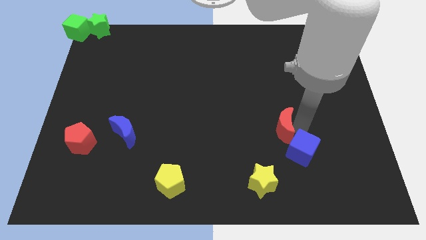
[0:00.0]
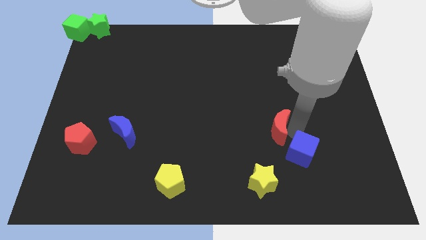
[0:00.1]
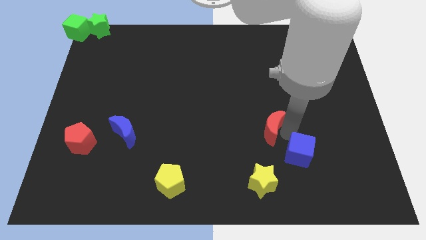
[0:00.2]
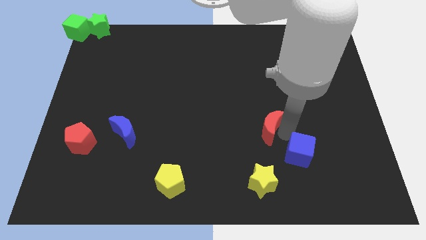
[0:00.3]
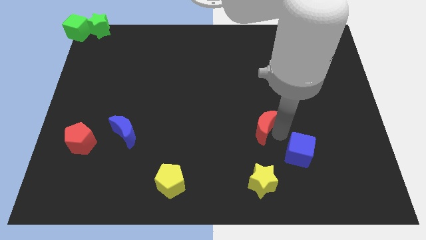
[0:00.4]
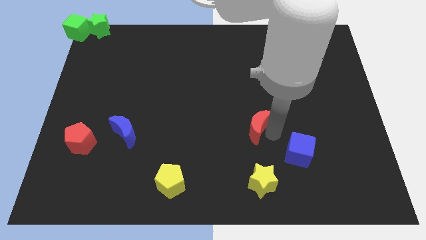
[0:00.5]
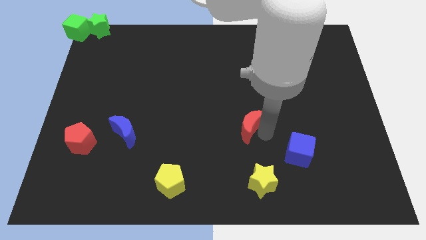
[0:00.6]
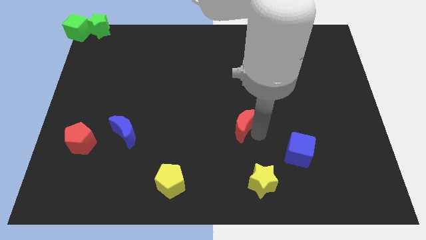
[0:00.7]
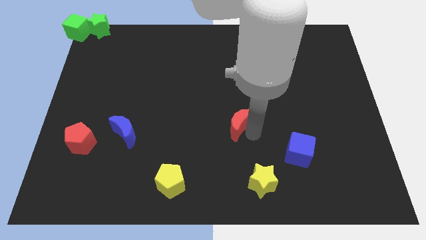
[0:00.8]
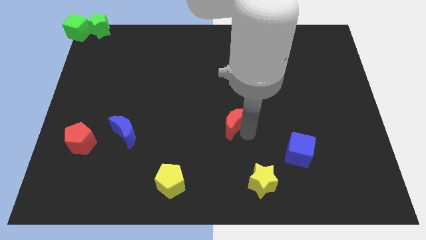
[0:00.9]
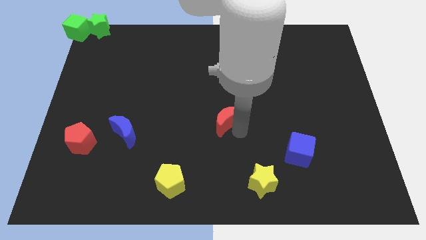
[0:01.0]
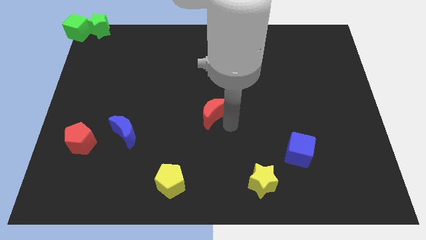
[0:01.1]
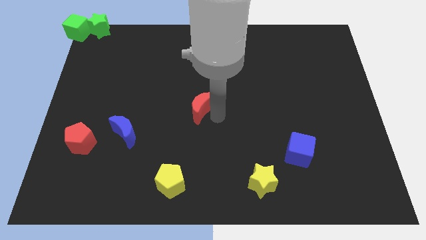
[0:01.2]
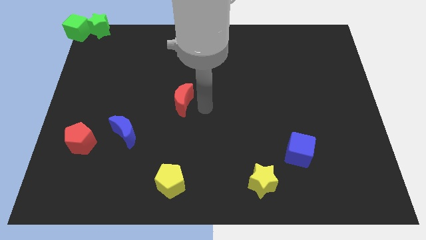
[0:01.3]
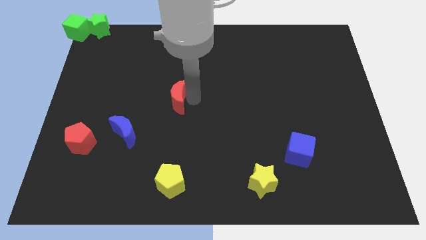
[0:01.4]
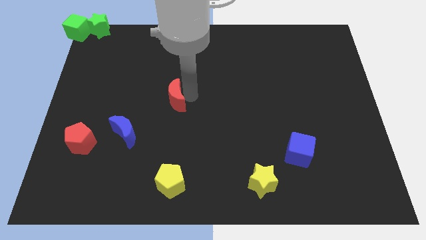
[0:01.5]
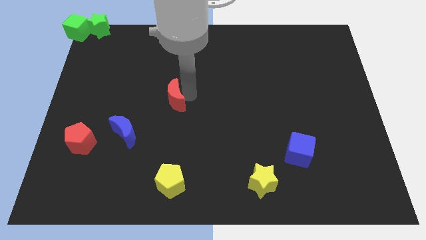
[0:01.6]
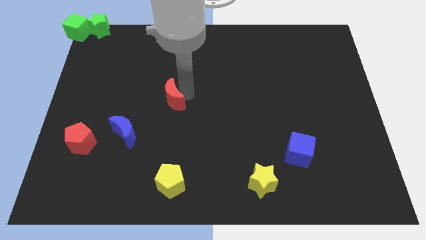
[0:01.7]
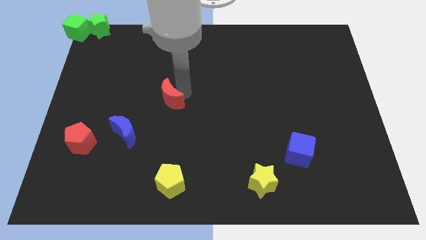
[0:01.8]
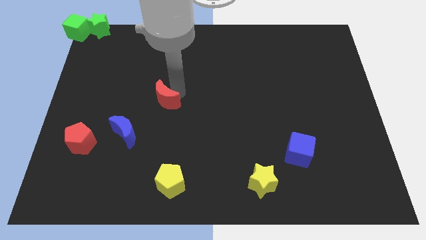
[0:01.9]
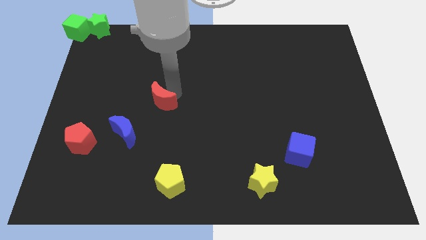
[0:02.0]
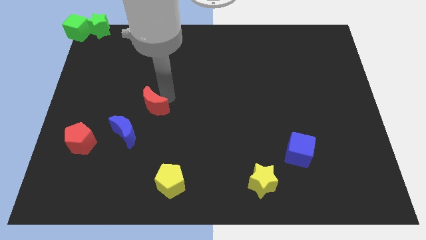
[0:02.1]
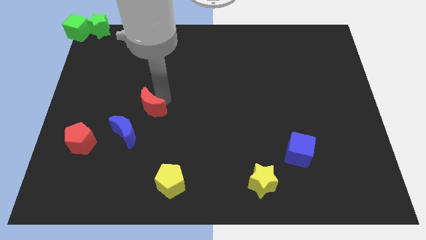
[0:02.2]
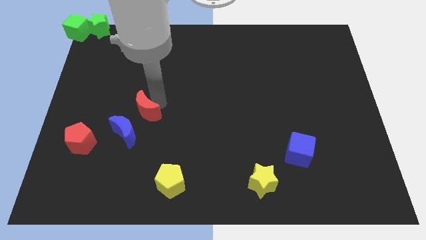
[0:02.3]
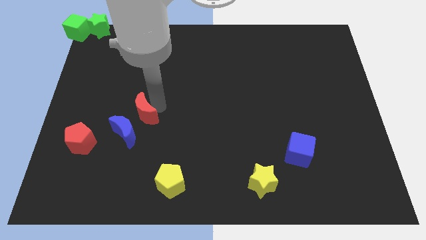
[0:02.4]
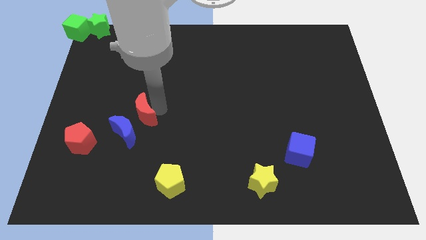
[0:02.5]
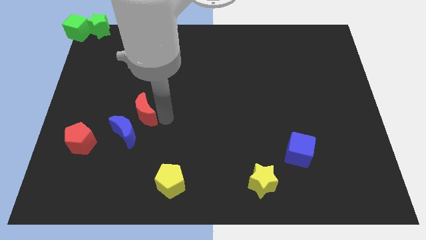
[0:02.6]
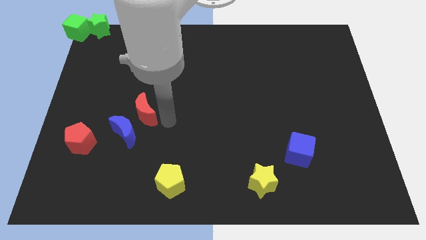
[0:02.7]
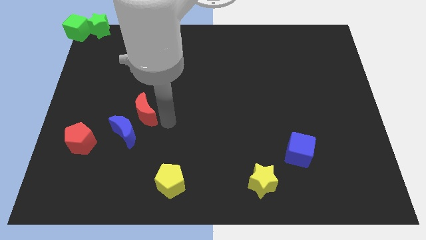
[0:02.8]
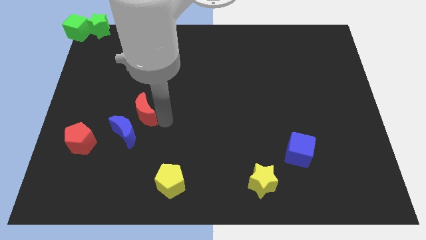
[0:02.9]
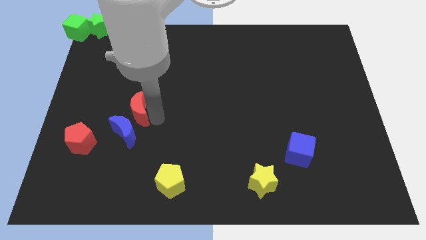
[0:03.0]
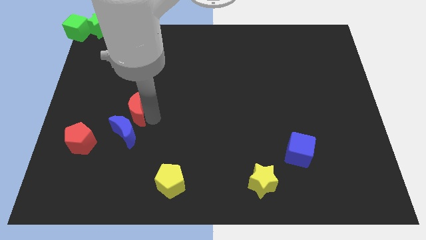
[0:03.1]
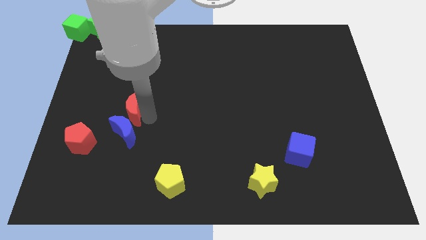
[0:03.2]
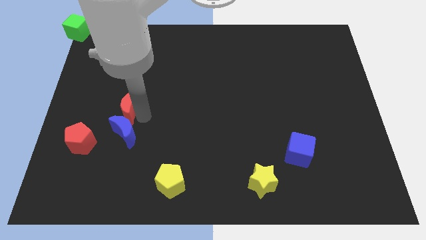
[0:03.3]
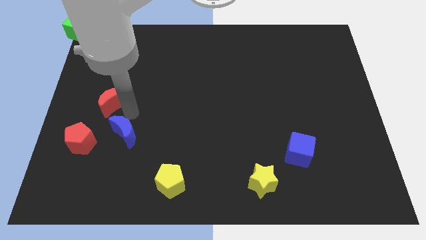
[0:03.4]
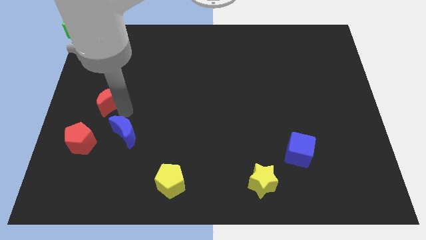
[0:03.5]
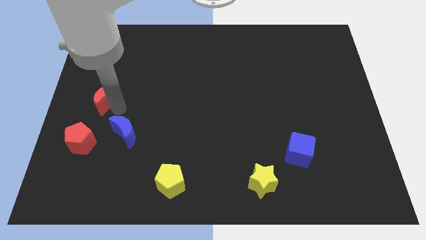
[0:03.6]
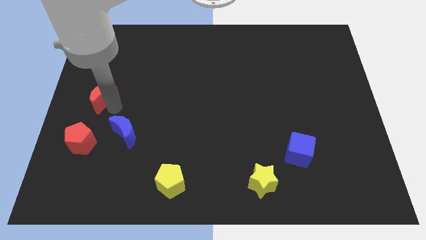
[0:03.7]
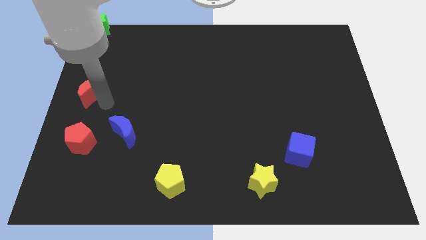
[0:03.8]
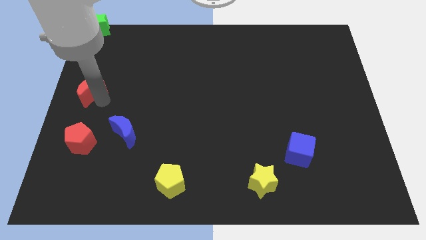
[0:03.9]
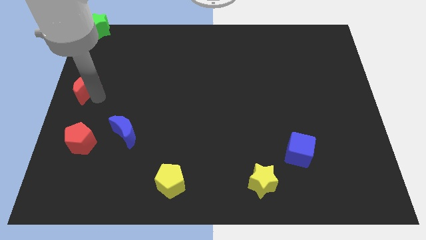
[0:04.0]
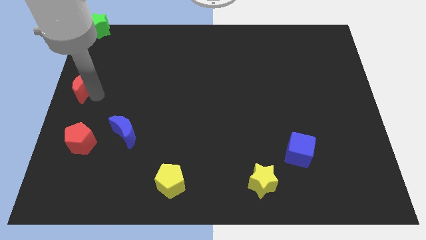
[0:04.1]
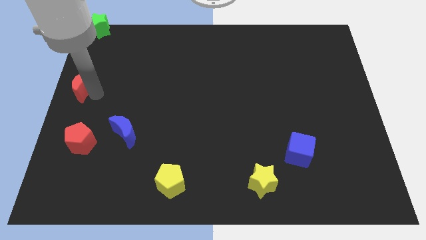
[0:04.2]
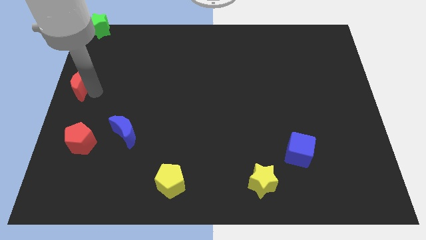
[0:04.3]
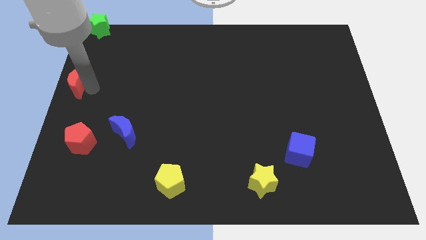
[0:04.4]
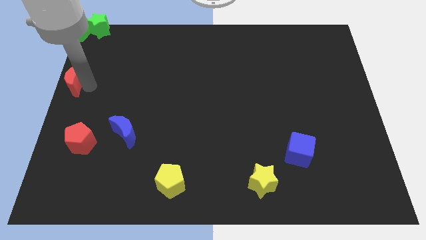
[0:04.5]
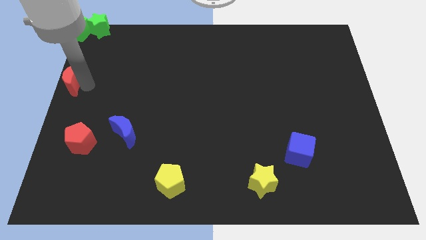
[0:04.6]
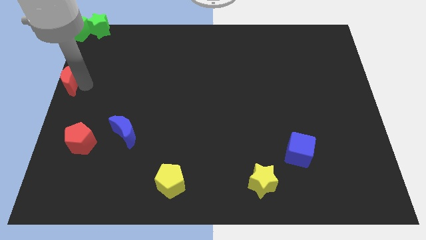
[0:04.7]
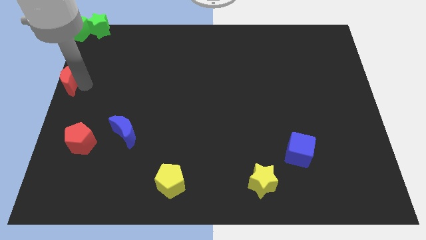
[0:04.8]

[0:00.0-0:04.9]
slide the red crescent to the left center of the board

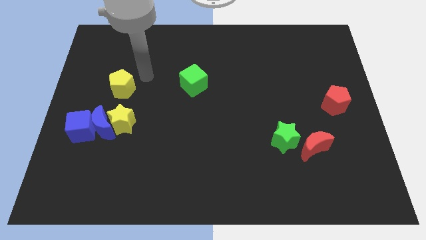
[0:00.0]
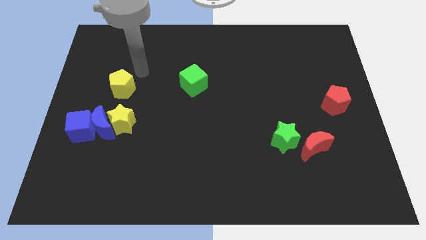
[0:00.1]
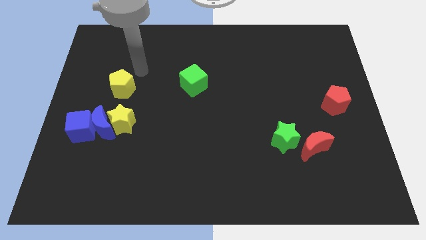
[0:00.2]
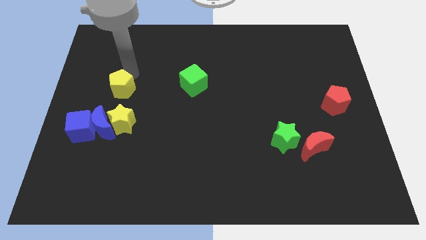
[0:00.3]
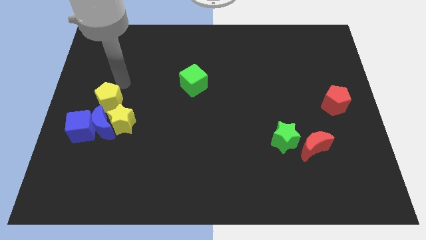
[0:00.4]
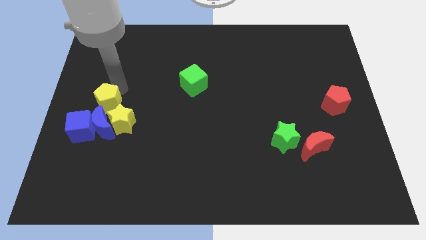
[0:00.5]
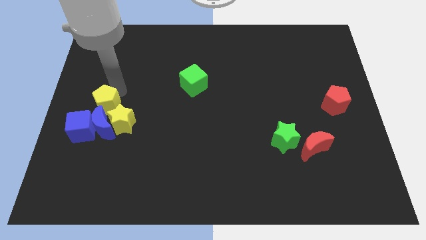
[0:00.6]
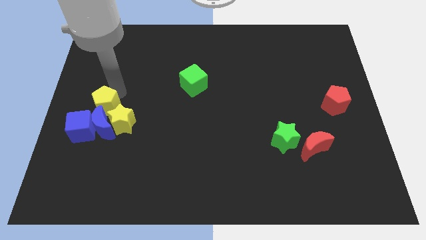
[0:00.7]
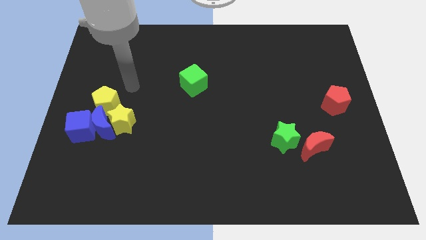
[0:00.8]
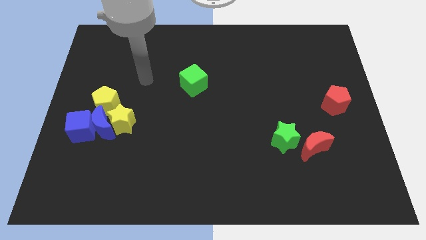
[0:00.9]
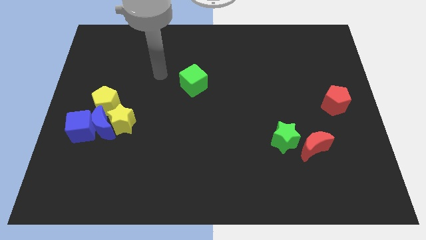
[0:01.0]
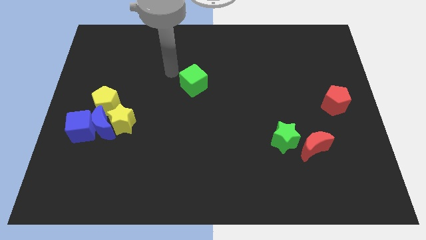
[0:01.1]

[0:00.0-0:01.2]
push the yellow pentagon into the blue crescent

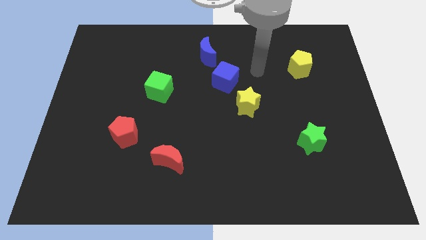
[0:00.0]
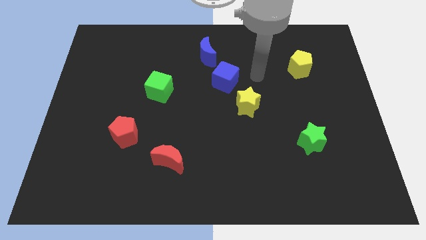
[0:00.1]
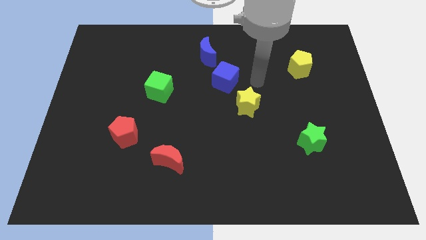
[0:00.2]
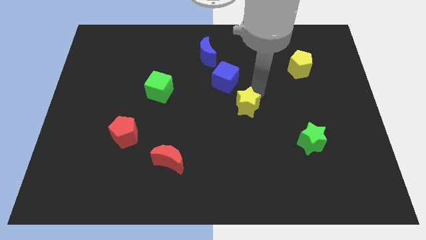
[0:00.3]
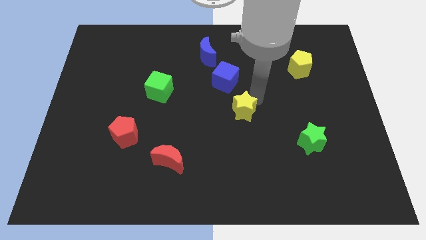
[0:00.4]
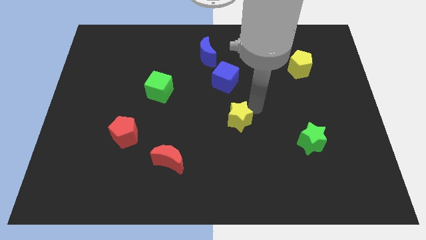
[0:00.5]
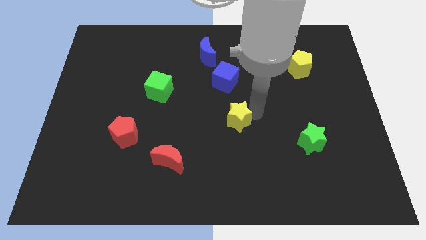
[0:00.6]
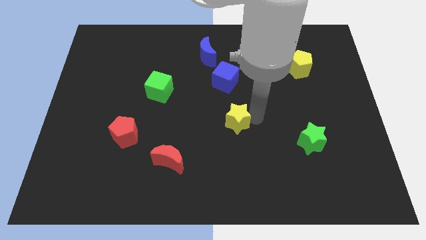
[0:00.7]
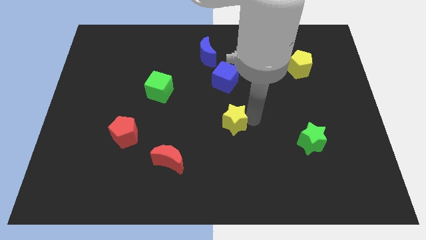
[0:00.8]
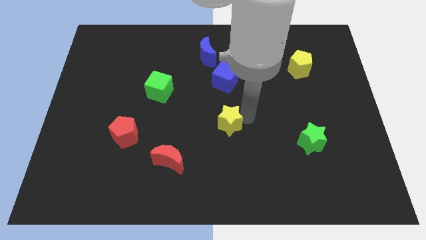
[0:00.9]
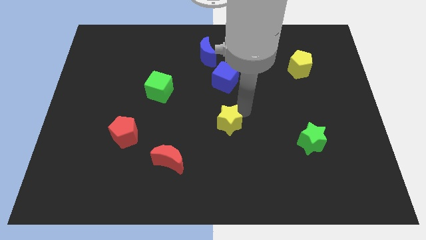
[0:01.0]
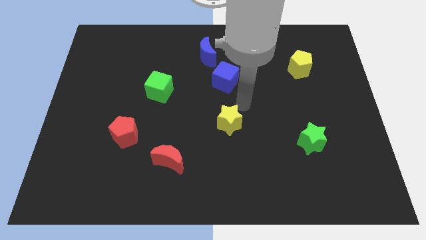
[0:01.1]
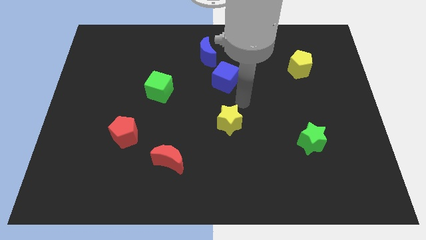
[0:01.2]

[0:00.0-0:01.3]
move the yellow star below the blue cube

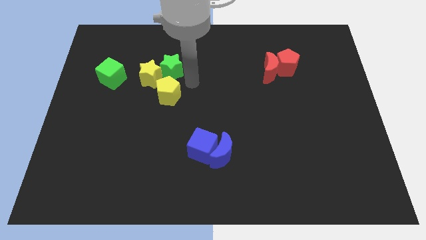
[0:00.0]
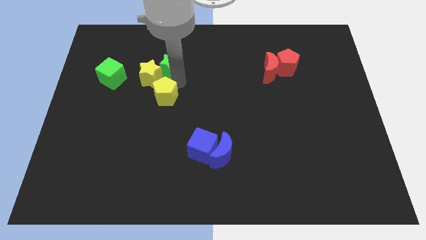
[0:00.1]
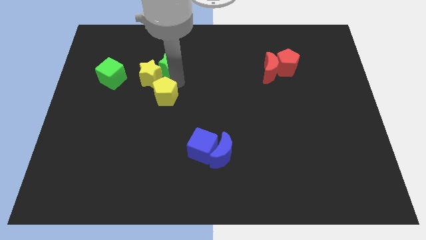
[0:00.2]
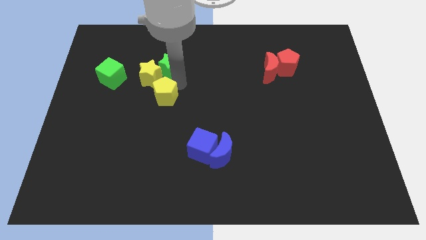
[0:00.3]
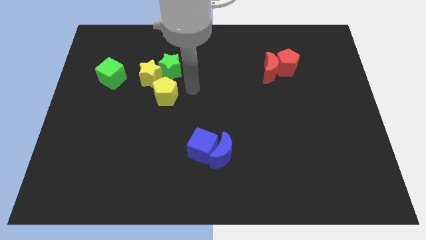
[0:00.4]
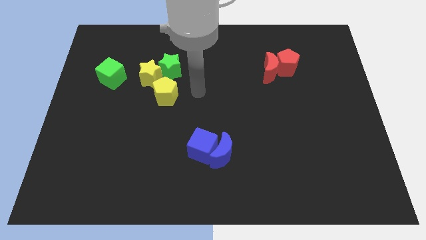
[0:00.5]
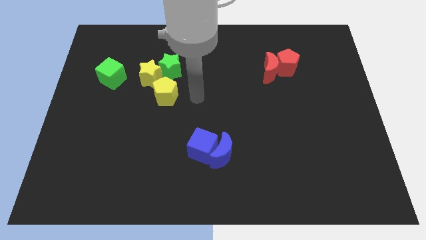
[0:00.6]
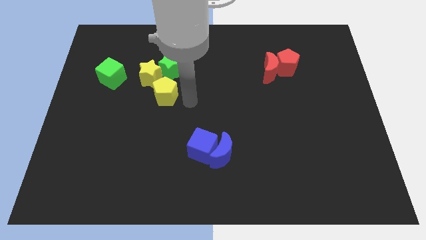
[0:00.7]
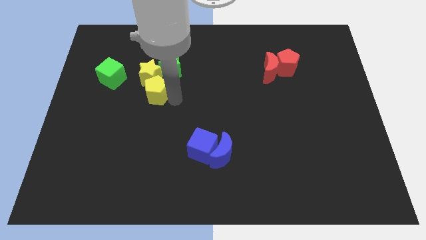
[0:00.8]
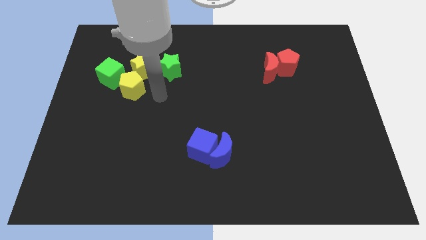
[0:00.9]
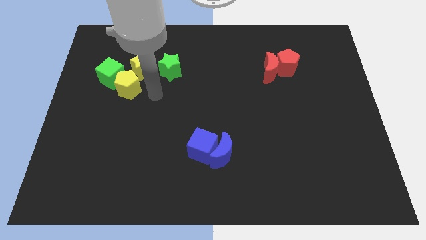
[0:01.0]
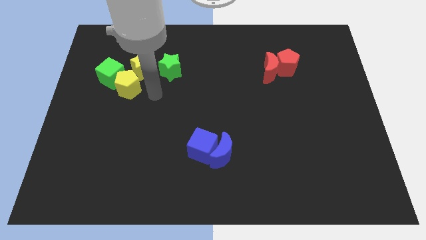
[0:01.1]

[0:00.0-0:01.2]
push the yellow pentagon towards the green cube

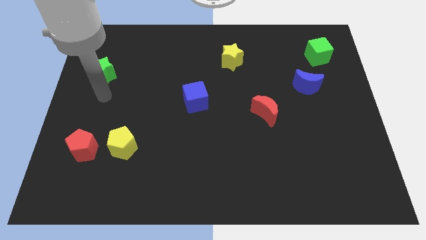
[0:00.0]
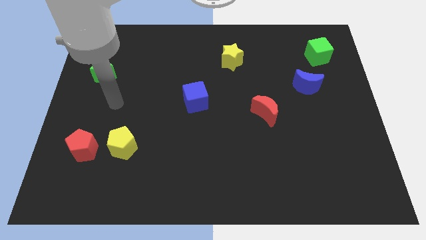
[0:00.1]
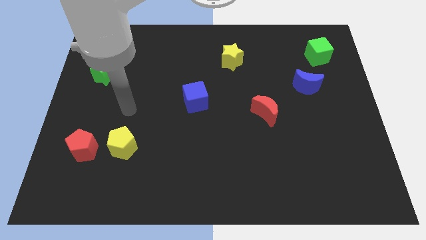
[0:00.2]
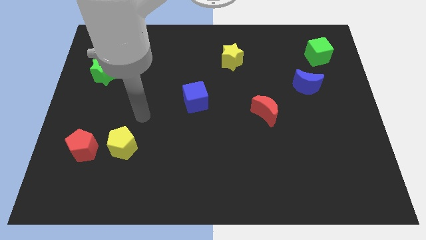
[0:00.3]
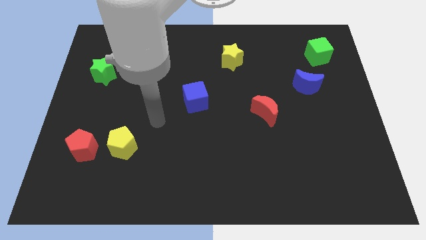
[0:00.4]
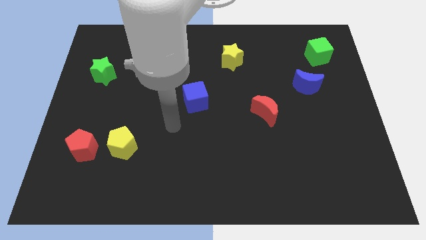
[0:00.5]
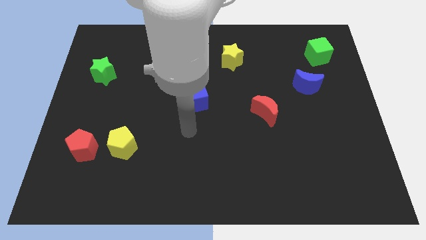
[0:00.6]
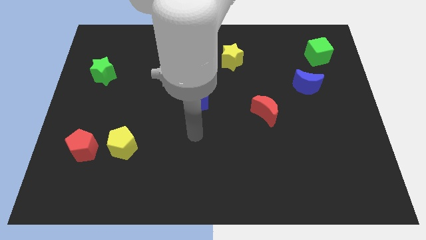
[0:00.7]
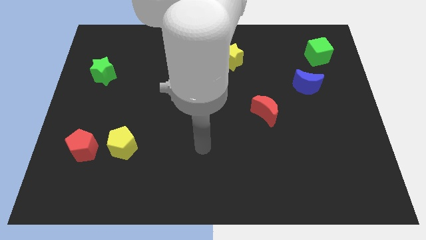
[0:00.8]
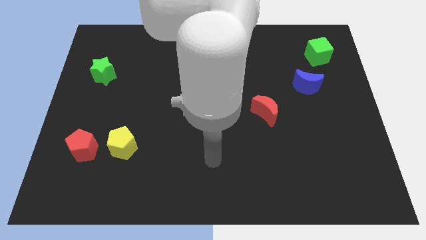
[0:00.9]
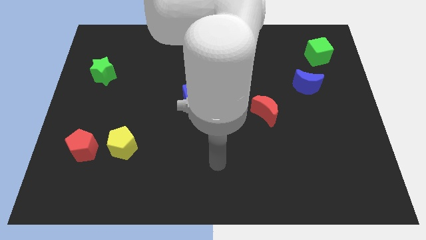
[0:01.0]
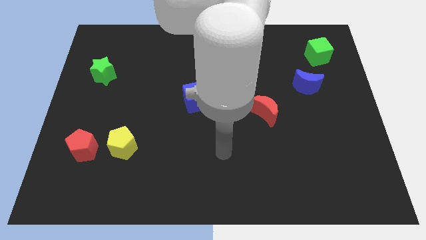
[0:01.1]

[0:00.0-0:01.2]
place arm at the bottom center
